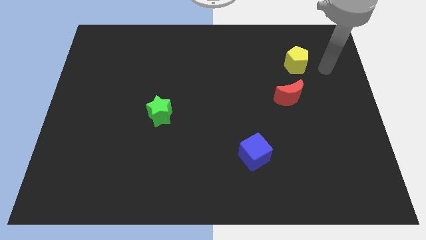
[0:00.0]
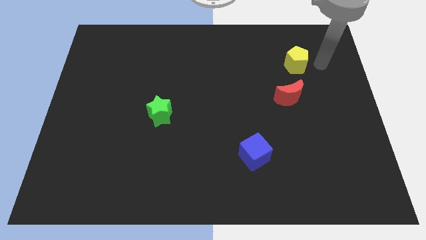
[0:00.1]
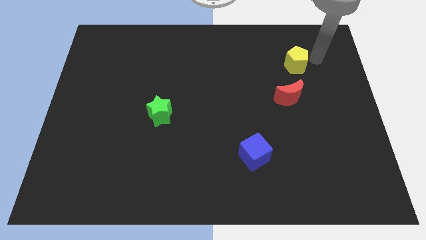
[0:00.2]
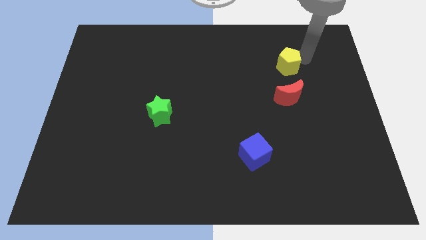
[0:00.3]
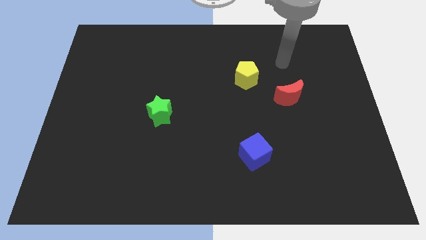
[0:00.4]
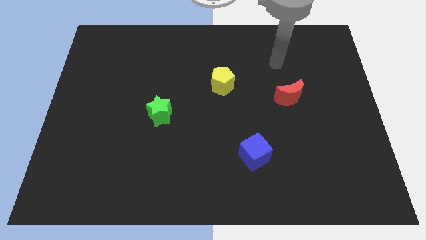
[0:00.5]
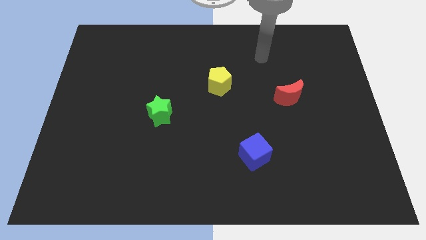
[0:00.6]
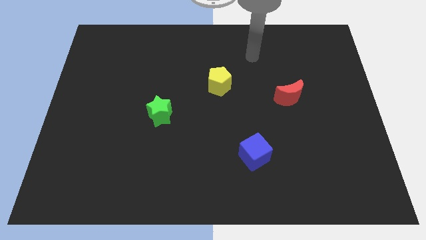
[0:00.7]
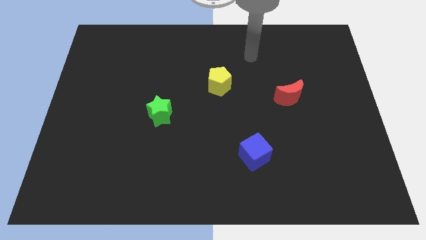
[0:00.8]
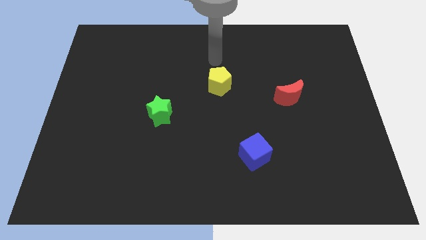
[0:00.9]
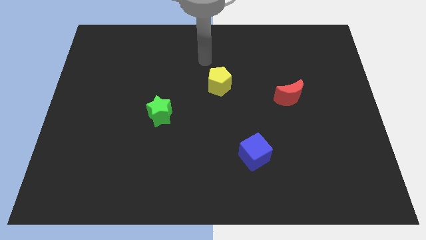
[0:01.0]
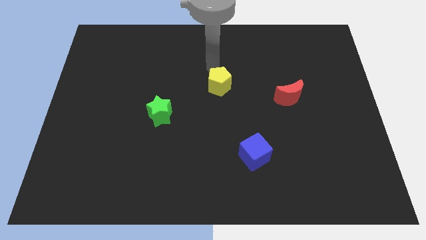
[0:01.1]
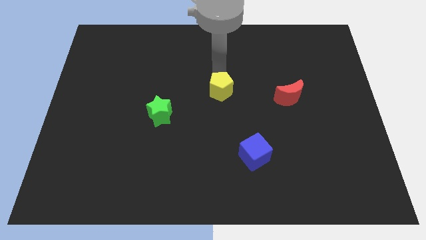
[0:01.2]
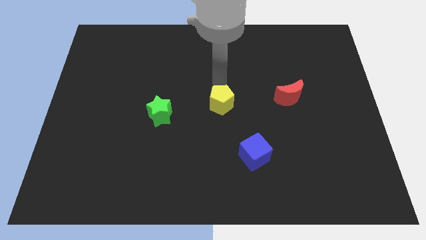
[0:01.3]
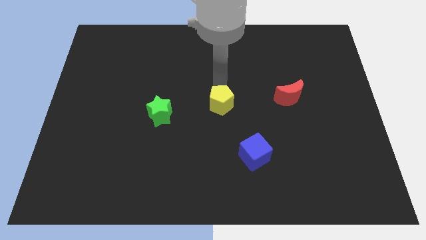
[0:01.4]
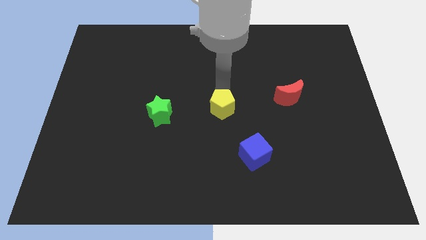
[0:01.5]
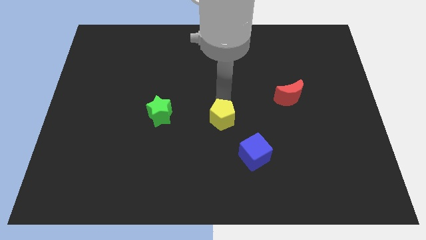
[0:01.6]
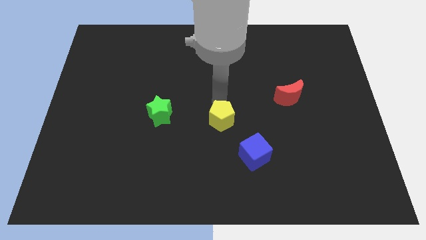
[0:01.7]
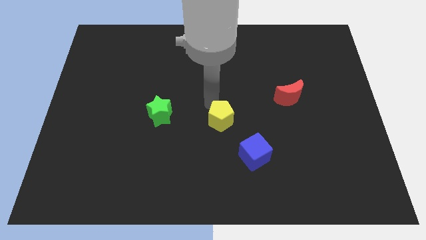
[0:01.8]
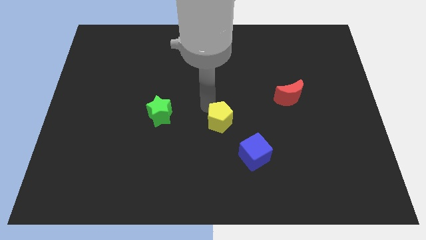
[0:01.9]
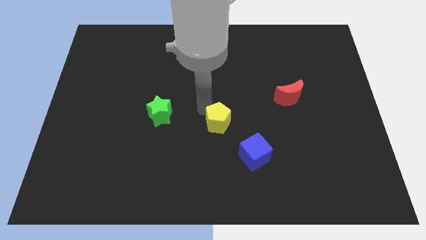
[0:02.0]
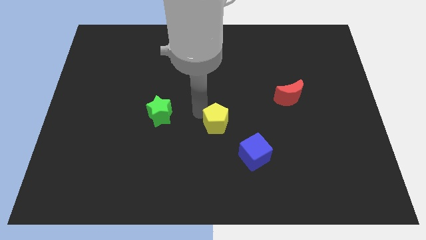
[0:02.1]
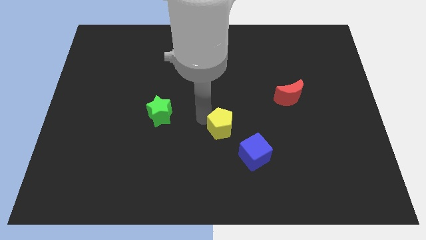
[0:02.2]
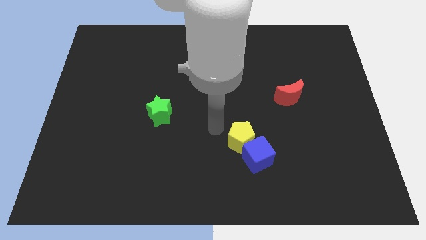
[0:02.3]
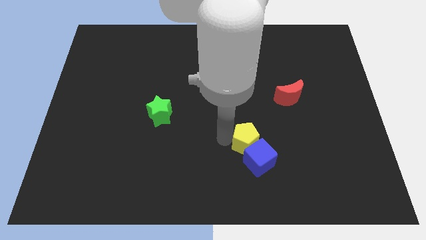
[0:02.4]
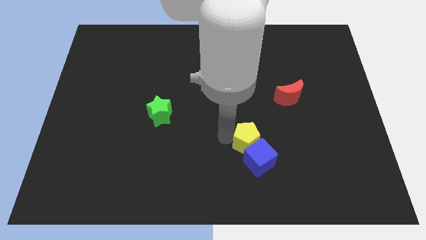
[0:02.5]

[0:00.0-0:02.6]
put the yellow pentagon to the cube

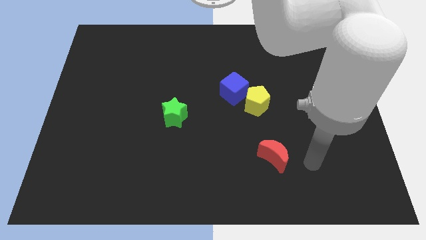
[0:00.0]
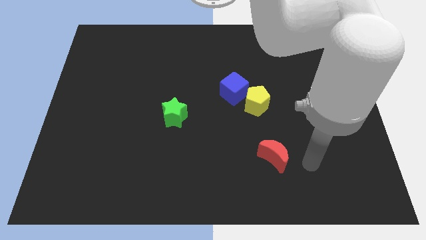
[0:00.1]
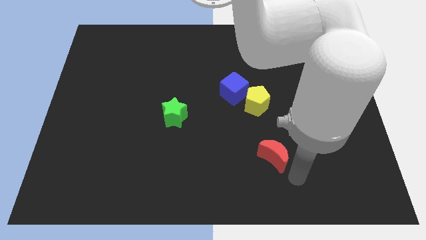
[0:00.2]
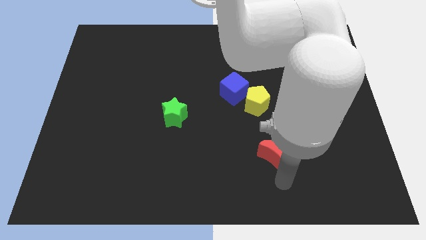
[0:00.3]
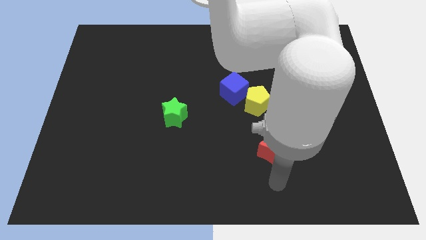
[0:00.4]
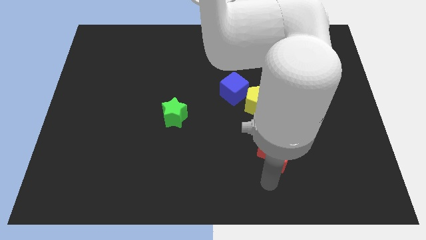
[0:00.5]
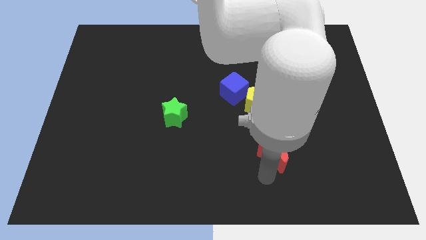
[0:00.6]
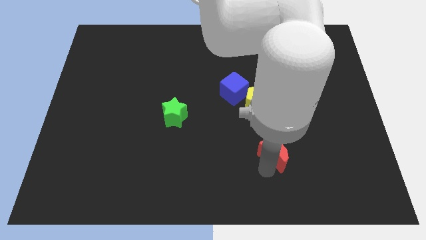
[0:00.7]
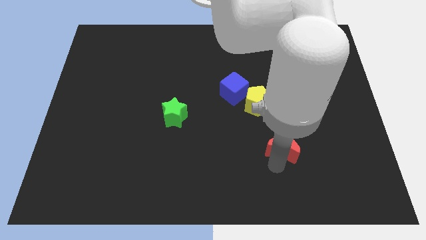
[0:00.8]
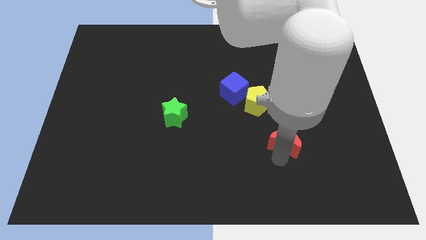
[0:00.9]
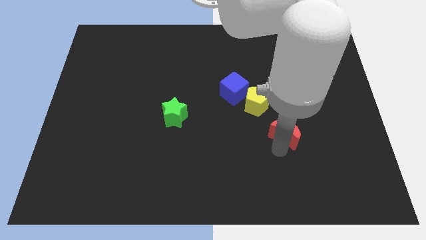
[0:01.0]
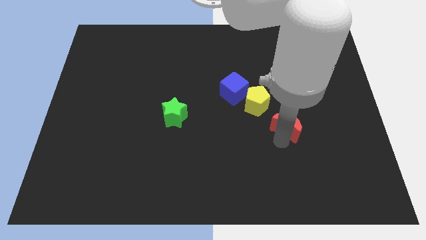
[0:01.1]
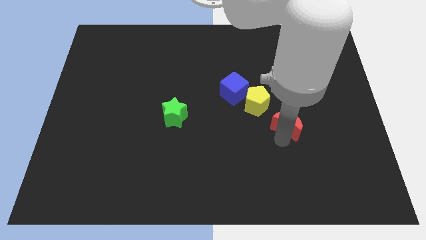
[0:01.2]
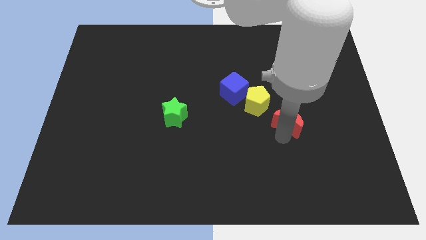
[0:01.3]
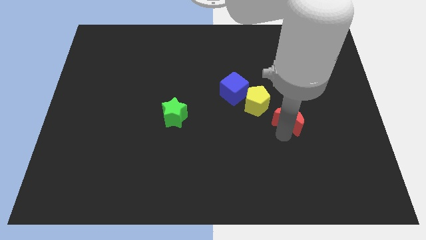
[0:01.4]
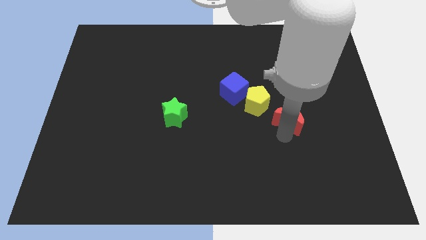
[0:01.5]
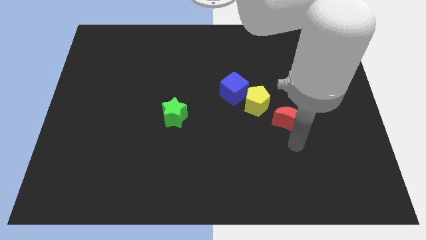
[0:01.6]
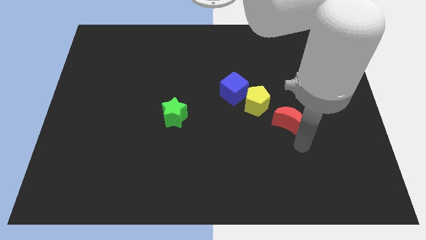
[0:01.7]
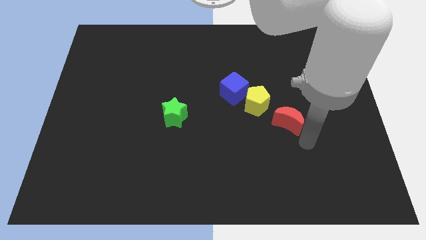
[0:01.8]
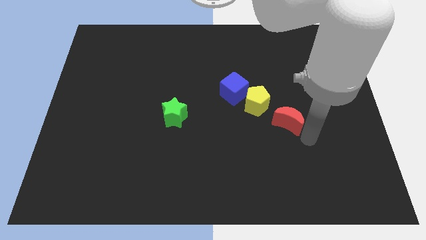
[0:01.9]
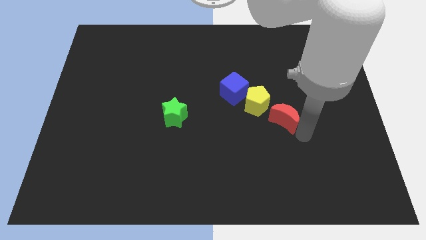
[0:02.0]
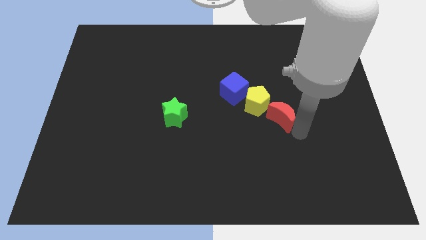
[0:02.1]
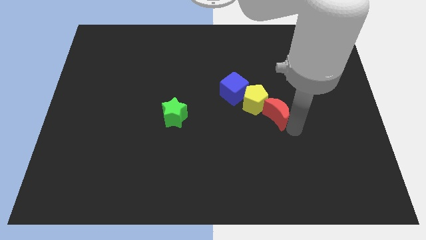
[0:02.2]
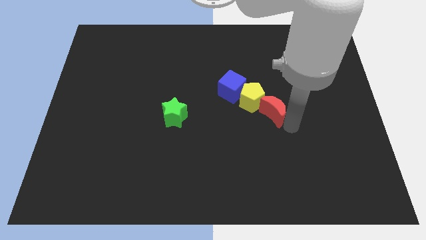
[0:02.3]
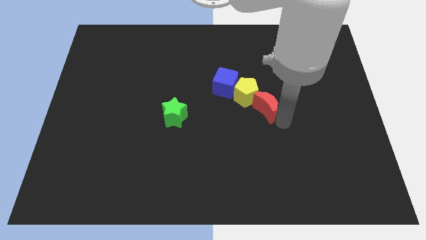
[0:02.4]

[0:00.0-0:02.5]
push the red moon towards the yellow block

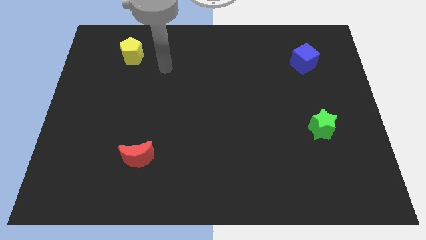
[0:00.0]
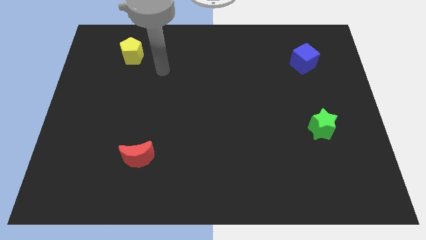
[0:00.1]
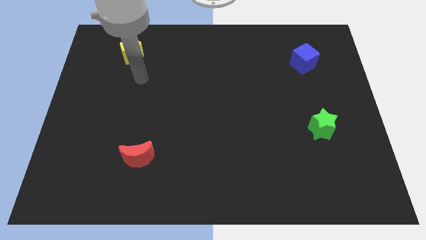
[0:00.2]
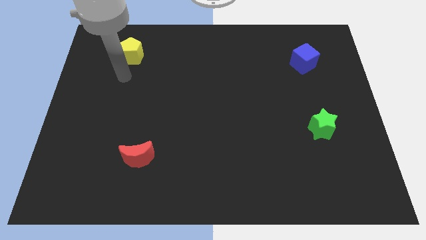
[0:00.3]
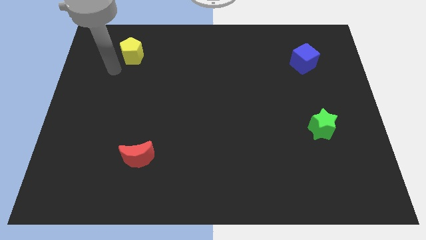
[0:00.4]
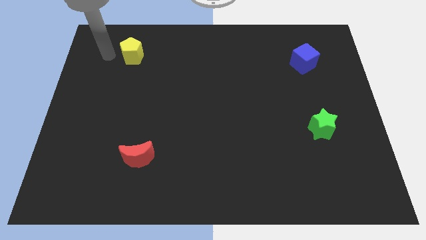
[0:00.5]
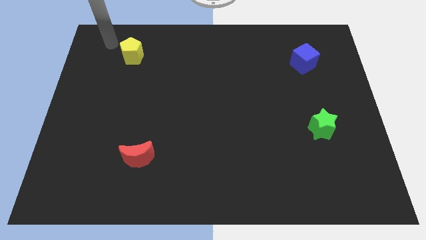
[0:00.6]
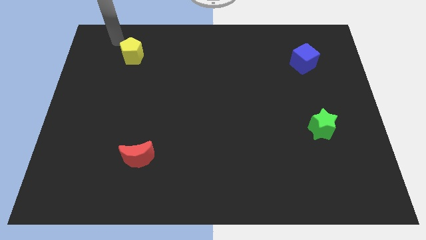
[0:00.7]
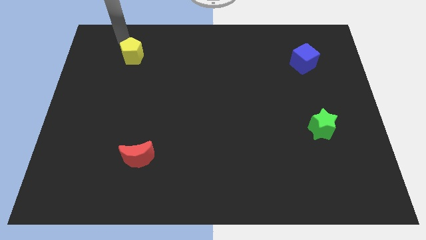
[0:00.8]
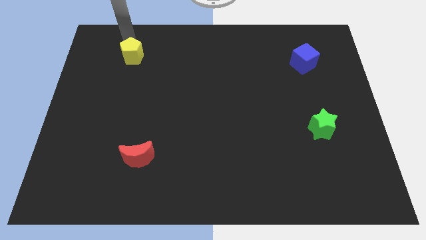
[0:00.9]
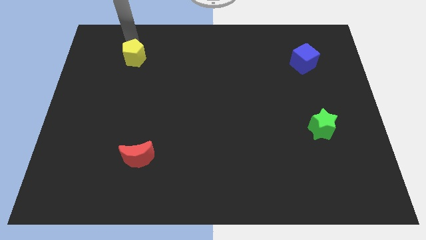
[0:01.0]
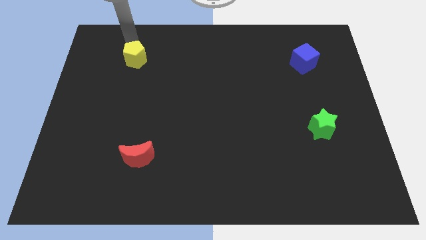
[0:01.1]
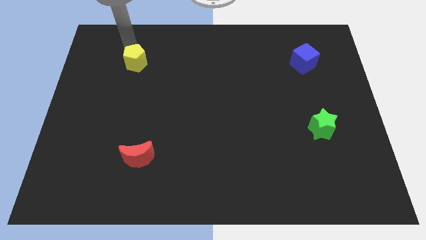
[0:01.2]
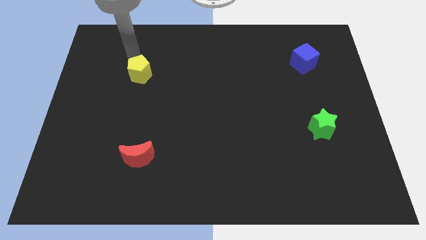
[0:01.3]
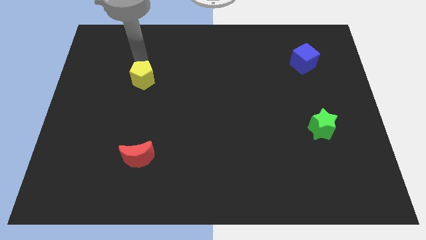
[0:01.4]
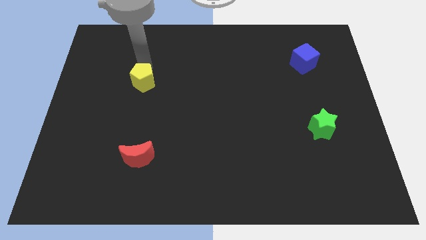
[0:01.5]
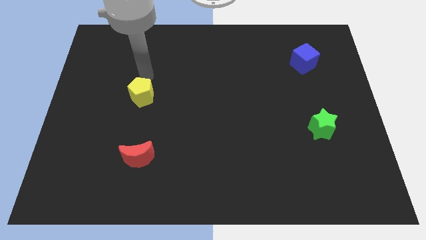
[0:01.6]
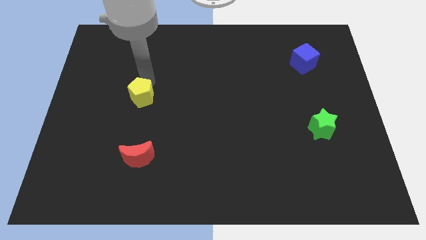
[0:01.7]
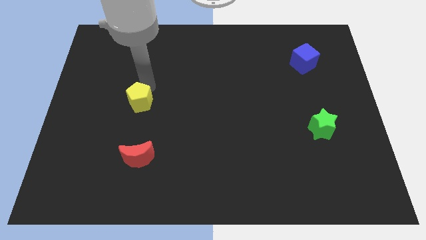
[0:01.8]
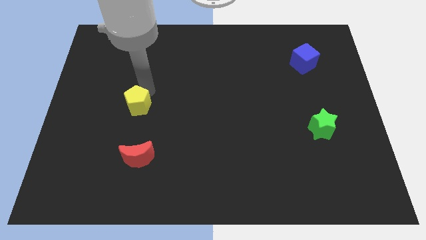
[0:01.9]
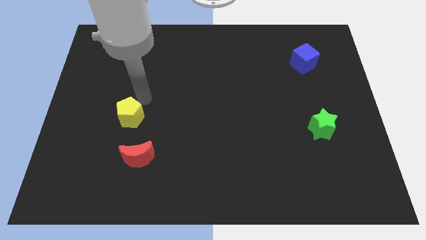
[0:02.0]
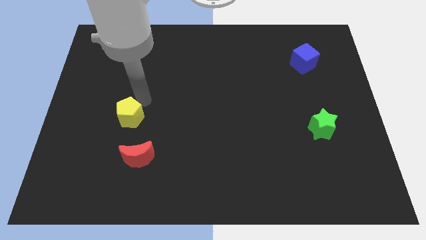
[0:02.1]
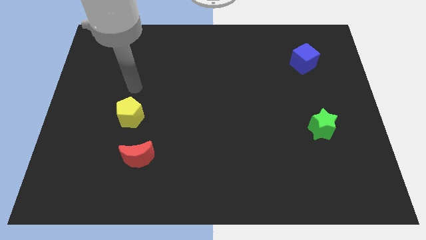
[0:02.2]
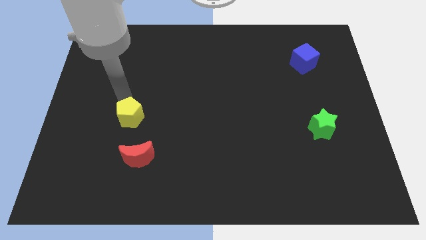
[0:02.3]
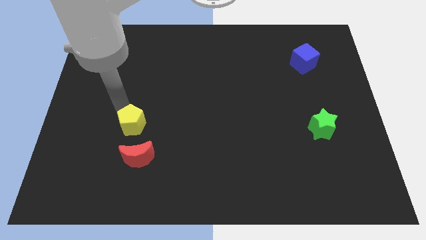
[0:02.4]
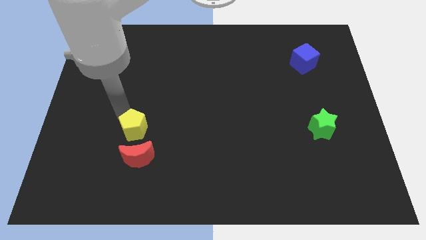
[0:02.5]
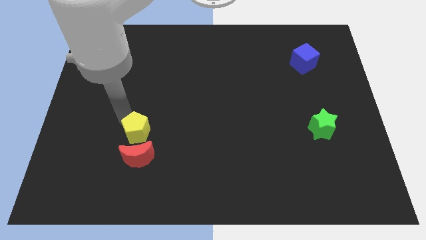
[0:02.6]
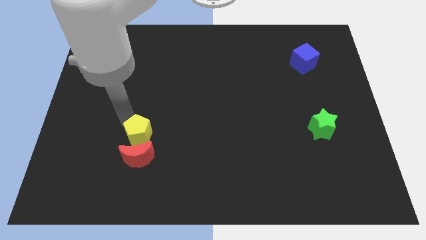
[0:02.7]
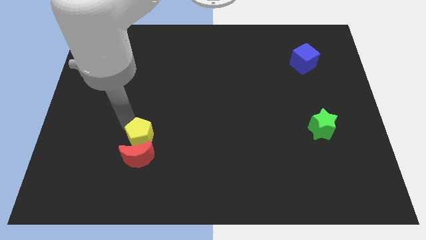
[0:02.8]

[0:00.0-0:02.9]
put the yellow pentagon close to the red block

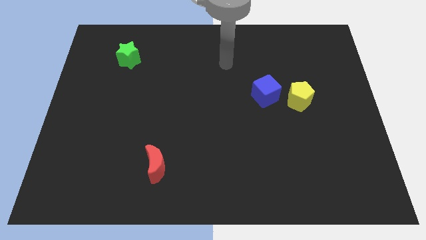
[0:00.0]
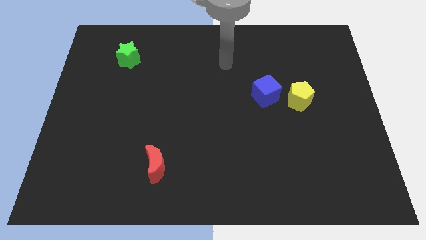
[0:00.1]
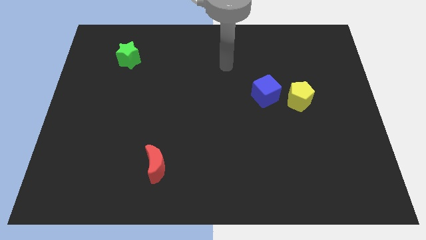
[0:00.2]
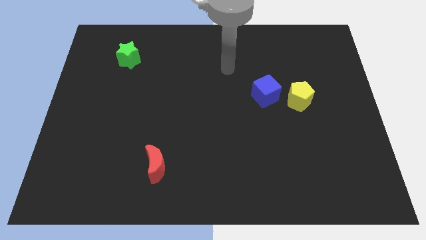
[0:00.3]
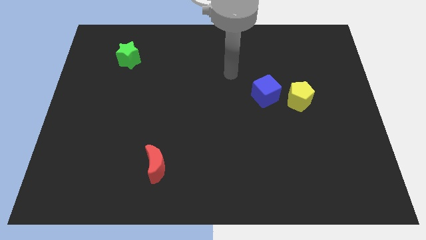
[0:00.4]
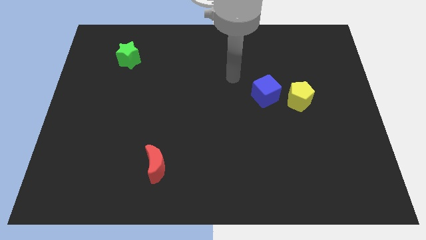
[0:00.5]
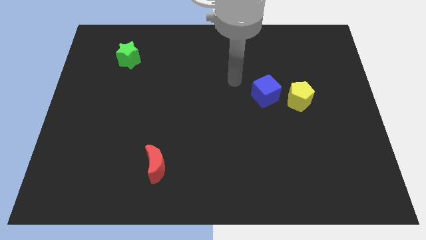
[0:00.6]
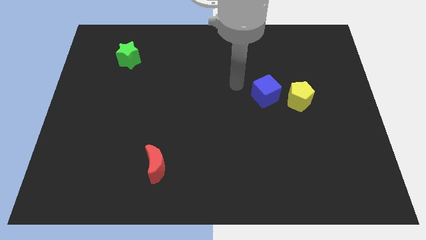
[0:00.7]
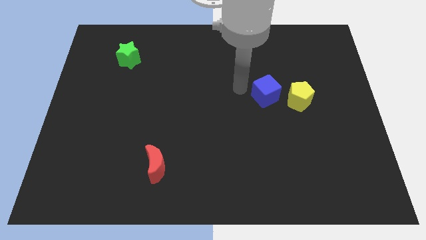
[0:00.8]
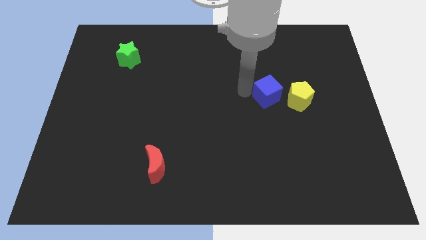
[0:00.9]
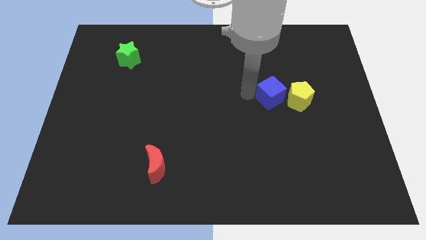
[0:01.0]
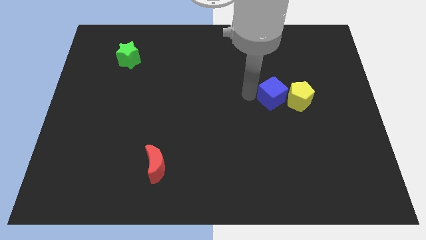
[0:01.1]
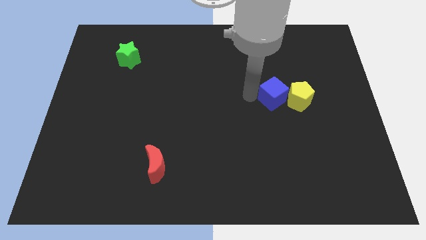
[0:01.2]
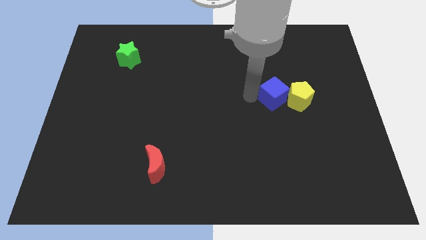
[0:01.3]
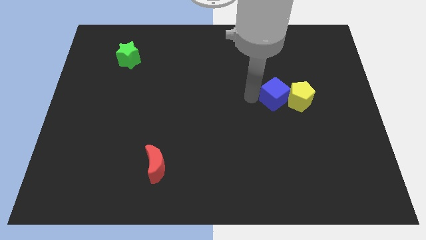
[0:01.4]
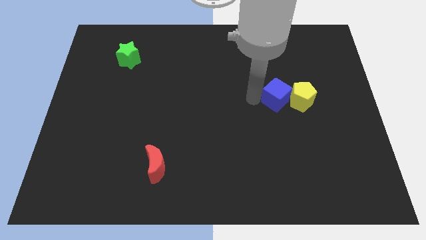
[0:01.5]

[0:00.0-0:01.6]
slide the blue cube towards the pentagon
